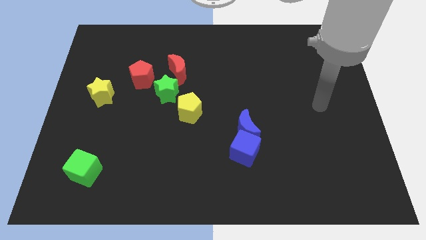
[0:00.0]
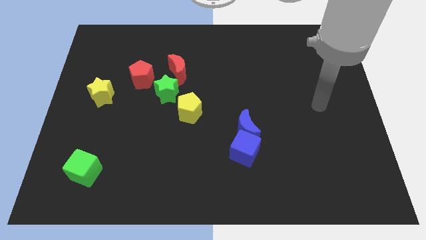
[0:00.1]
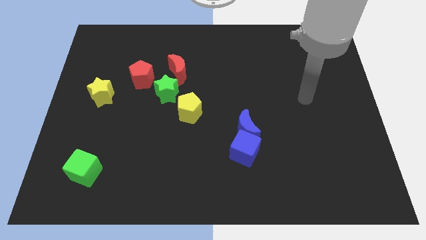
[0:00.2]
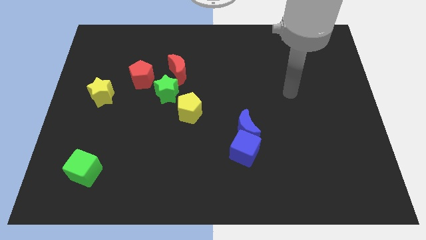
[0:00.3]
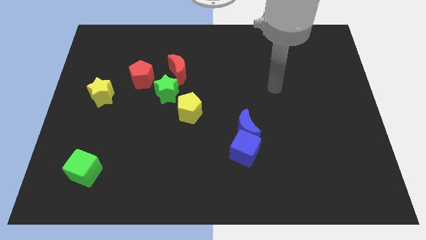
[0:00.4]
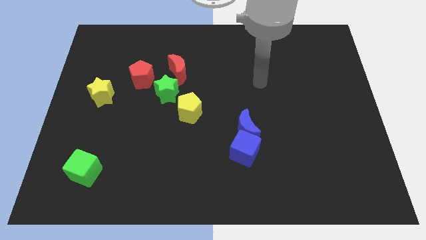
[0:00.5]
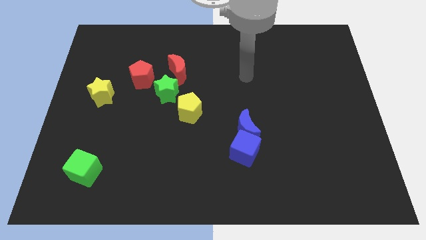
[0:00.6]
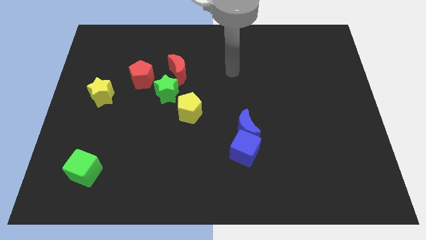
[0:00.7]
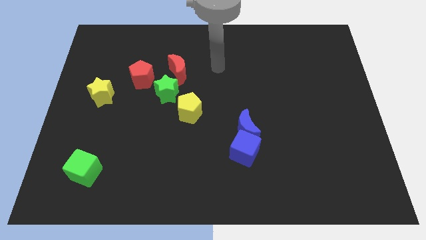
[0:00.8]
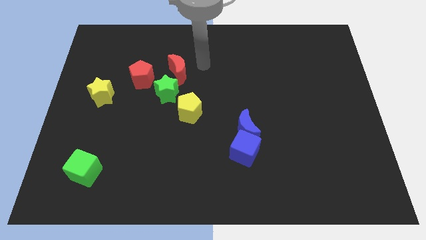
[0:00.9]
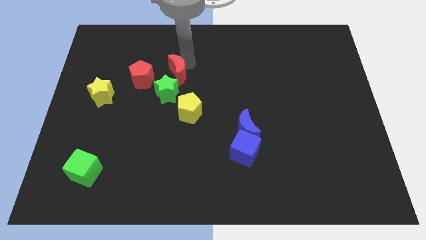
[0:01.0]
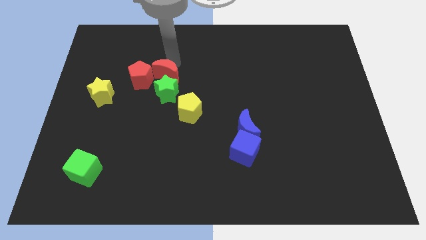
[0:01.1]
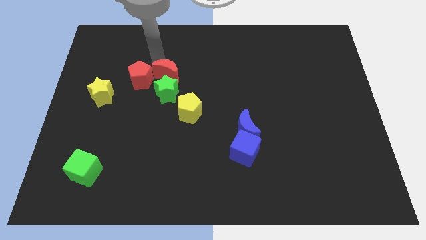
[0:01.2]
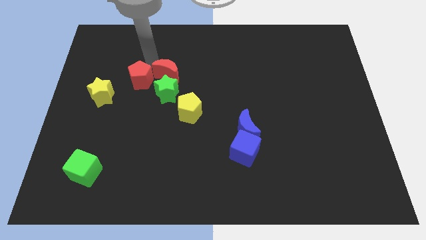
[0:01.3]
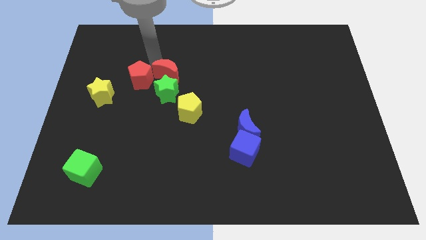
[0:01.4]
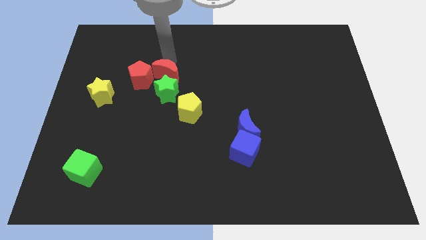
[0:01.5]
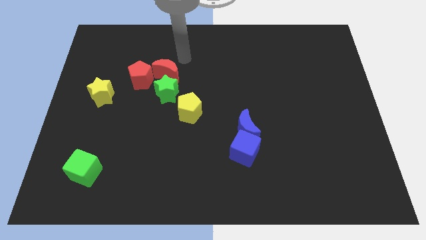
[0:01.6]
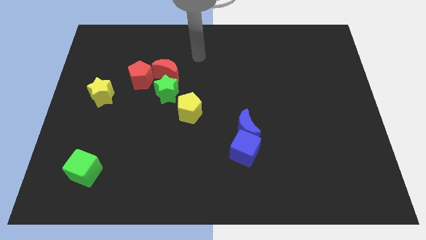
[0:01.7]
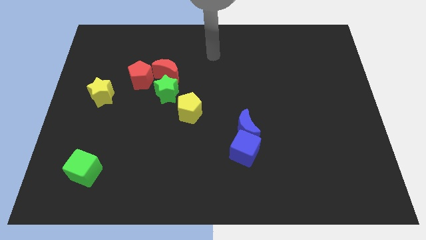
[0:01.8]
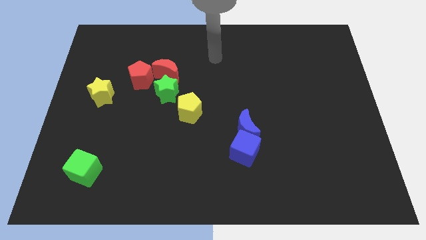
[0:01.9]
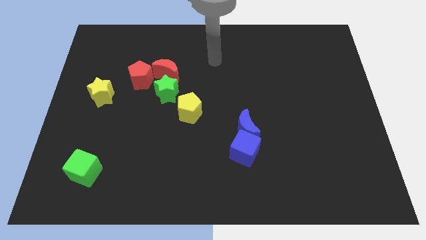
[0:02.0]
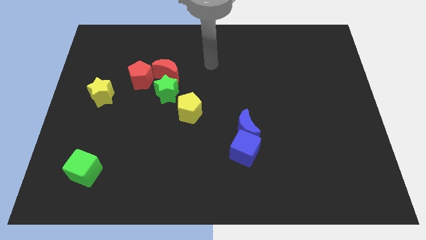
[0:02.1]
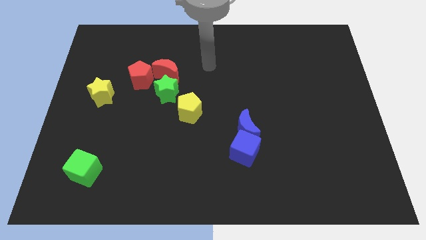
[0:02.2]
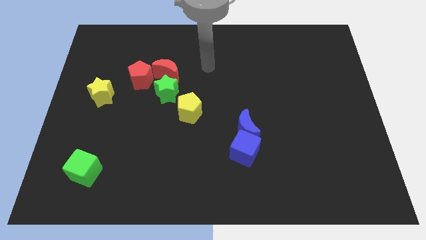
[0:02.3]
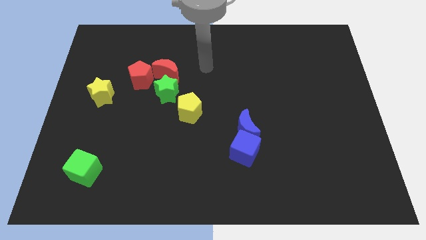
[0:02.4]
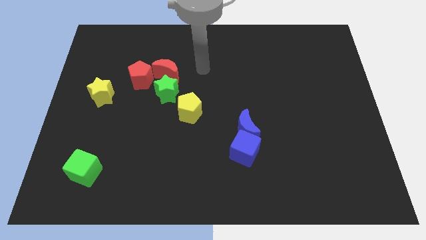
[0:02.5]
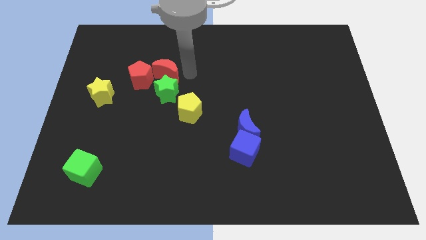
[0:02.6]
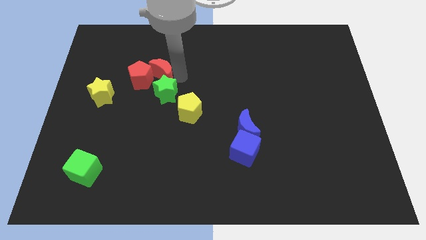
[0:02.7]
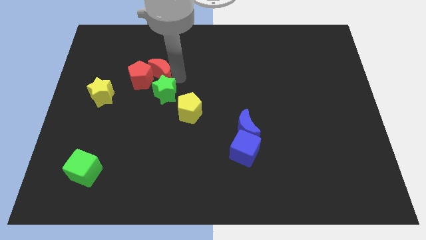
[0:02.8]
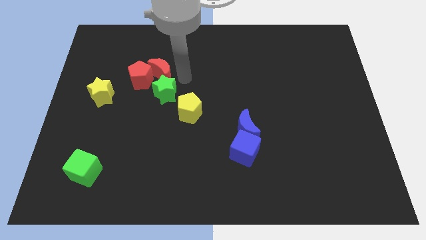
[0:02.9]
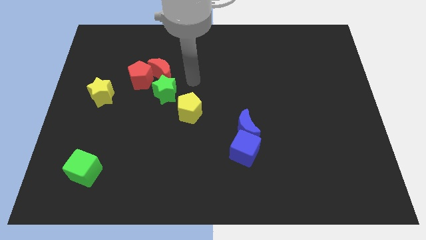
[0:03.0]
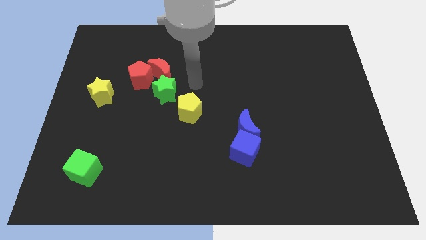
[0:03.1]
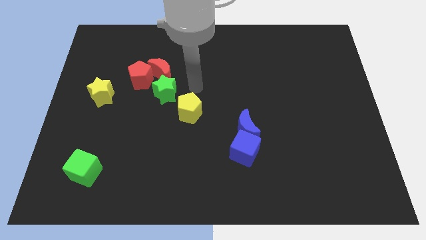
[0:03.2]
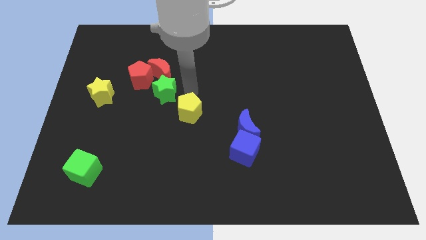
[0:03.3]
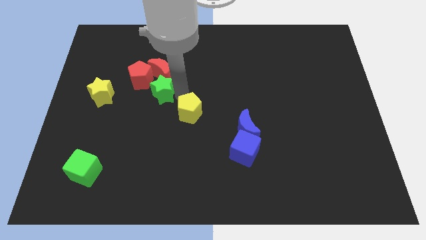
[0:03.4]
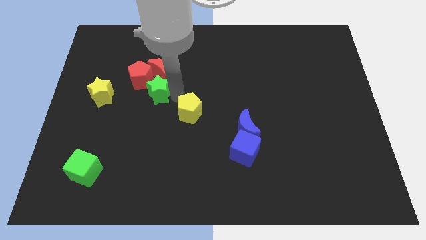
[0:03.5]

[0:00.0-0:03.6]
push the red crescent slightly to its left

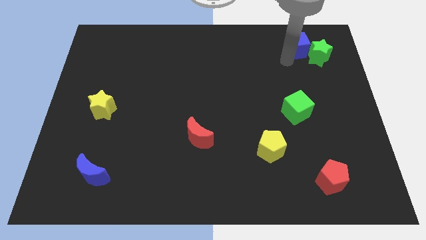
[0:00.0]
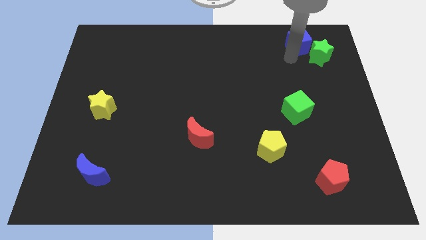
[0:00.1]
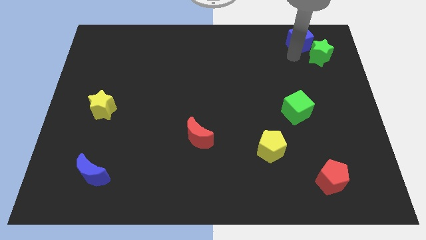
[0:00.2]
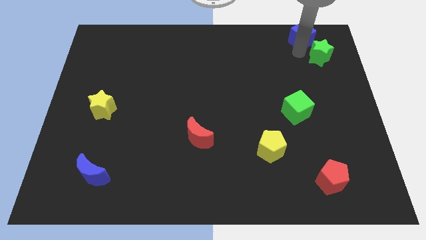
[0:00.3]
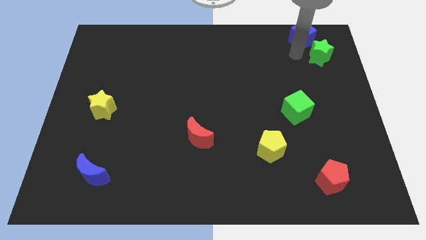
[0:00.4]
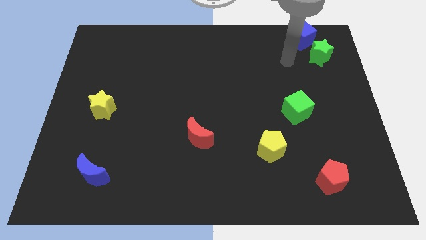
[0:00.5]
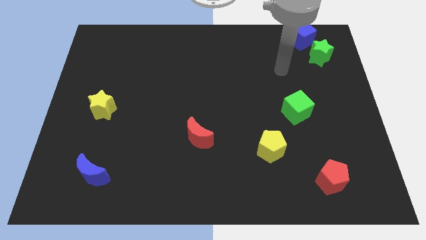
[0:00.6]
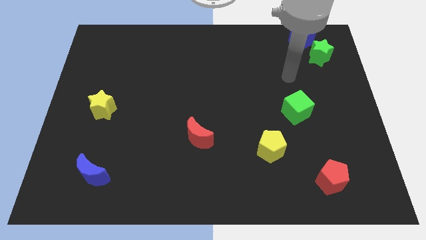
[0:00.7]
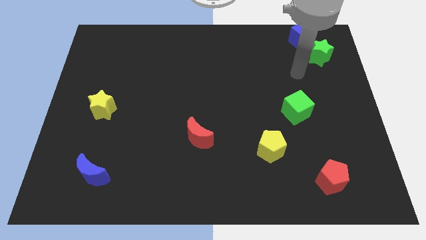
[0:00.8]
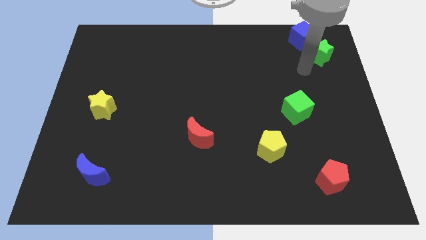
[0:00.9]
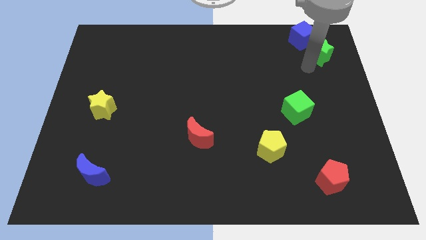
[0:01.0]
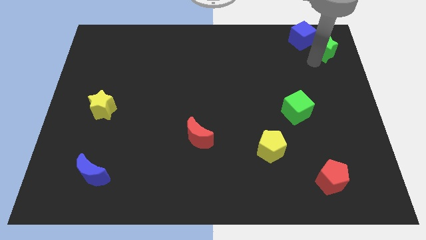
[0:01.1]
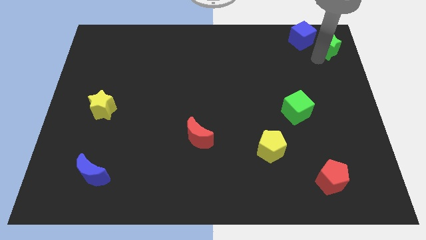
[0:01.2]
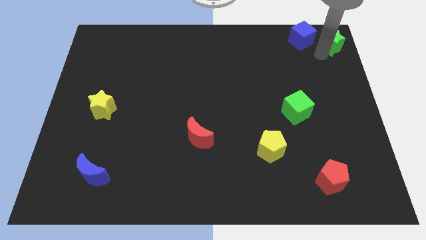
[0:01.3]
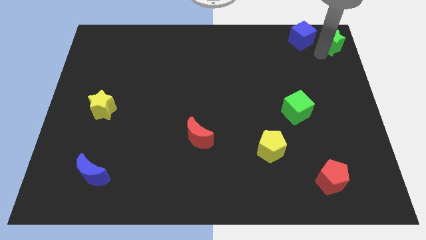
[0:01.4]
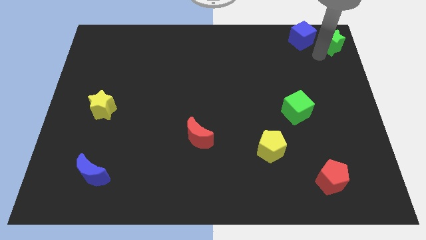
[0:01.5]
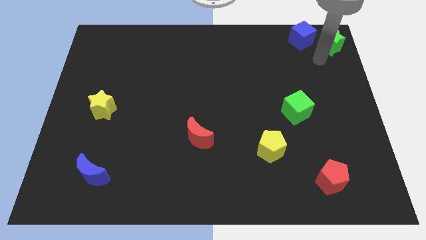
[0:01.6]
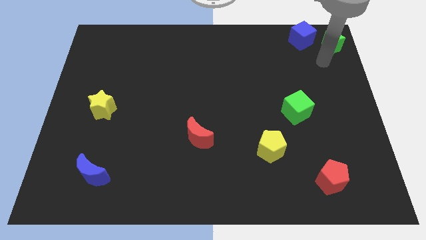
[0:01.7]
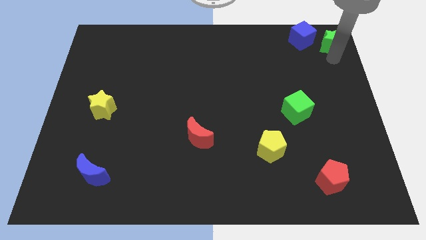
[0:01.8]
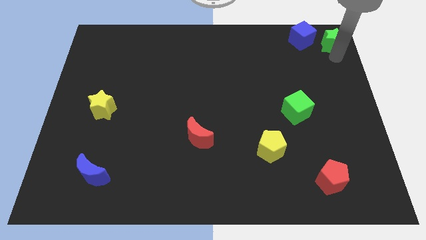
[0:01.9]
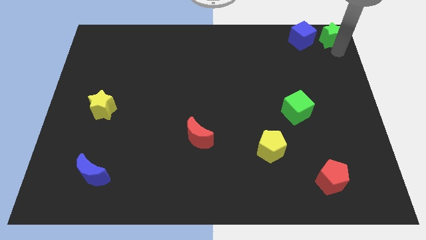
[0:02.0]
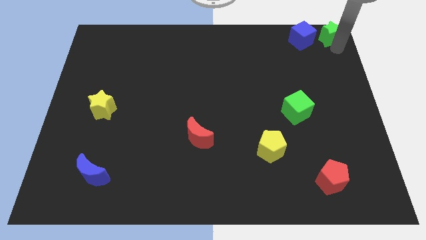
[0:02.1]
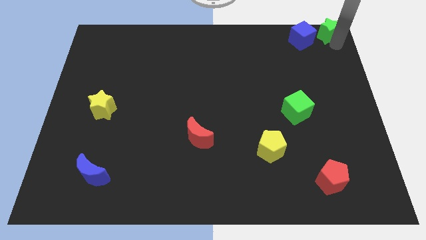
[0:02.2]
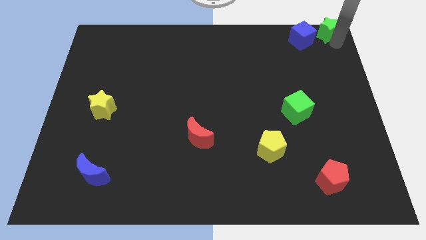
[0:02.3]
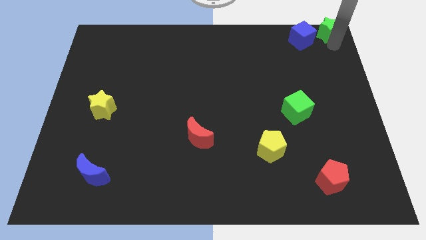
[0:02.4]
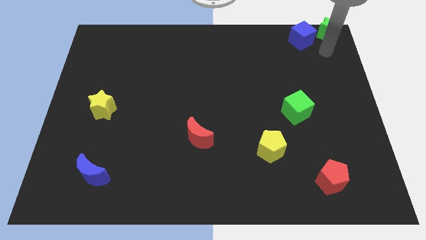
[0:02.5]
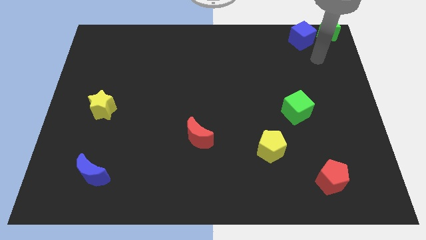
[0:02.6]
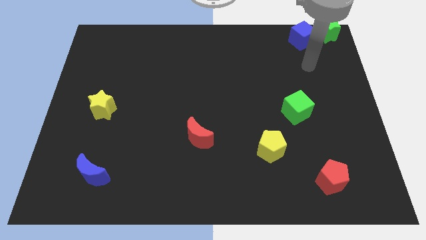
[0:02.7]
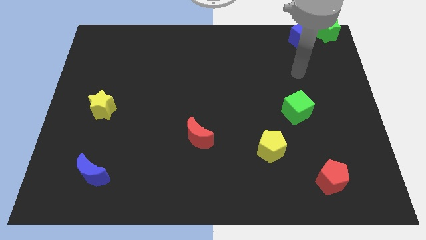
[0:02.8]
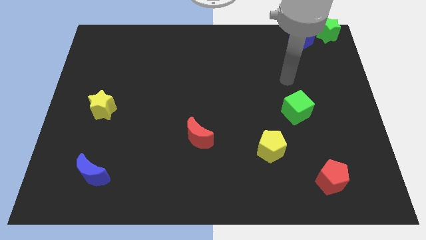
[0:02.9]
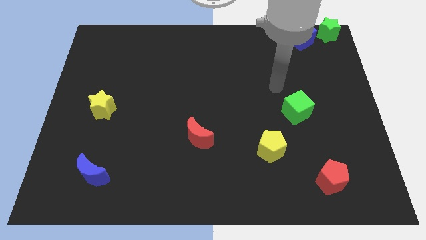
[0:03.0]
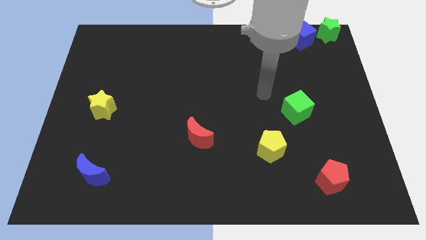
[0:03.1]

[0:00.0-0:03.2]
place green star towards top corner

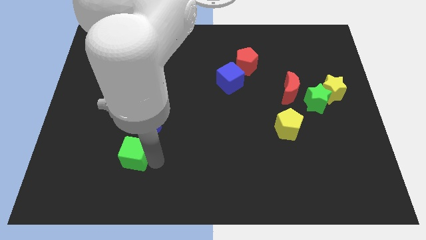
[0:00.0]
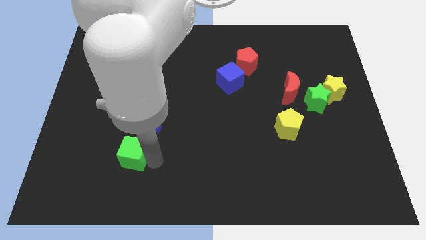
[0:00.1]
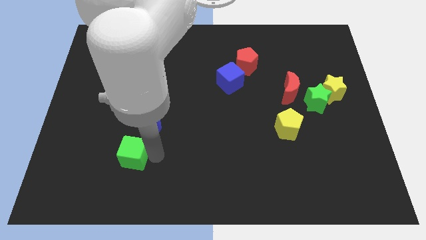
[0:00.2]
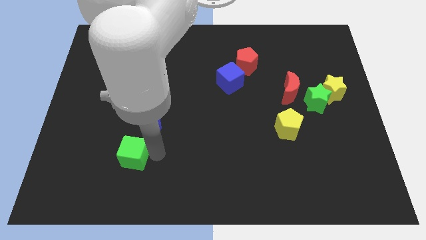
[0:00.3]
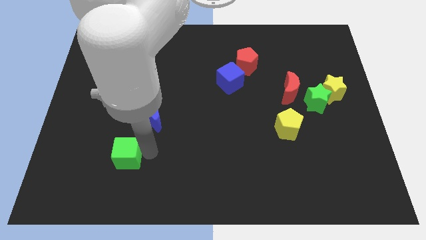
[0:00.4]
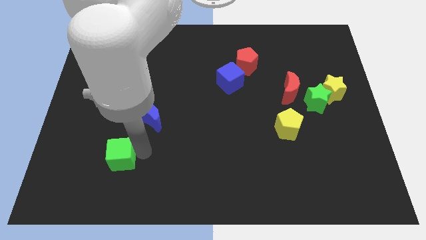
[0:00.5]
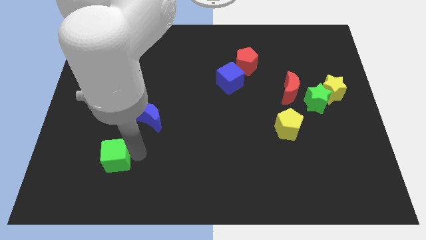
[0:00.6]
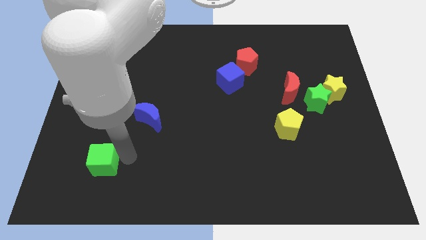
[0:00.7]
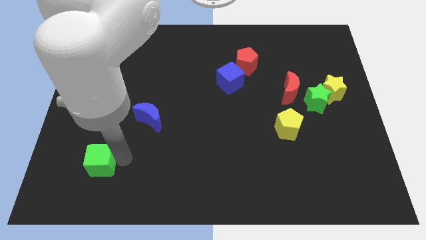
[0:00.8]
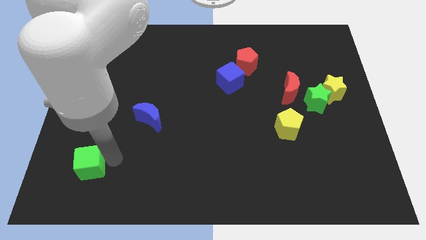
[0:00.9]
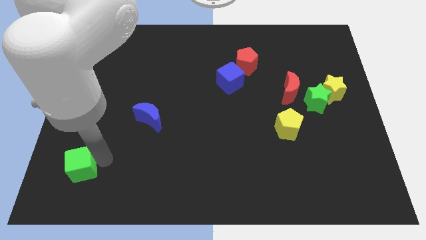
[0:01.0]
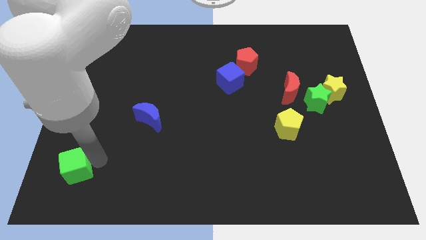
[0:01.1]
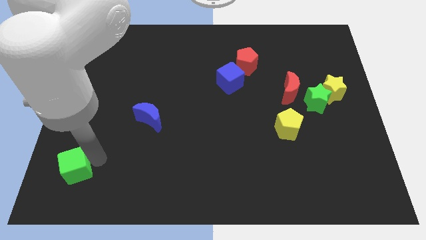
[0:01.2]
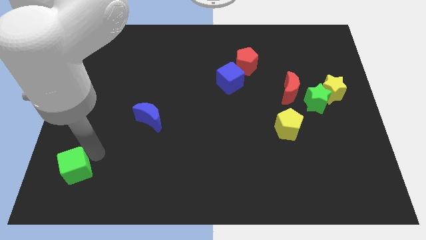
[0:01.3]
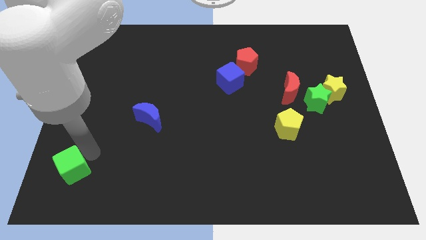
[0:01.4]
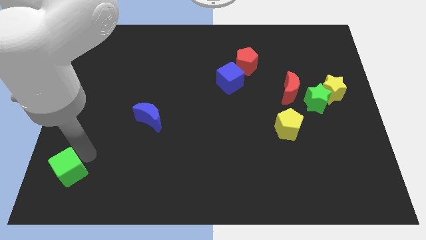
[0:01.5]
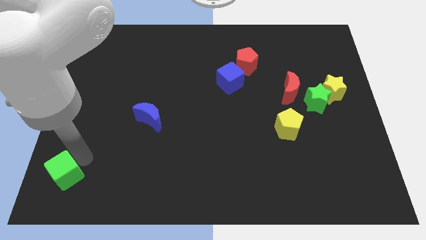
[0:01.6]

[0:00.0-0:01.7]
slide the green cube to the bottom left

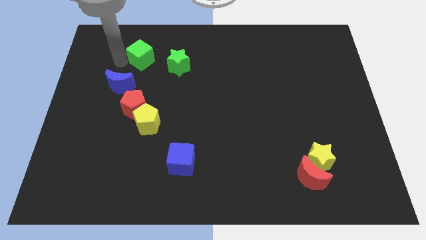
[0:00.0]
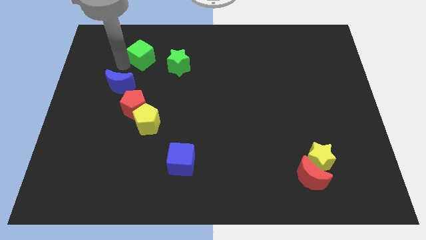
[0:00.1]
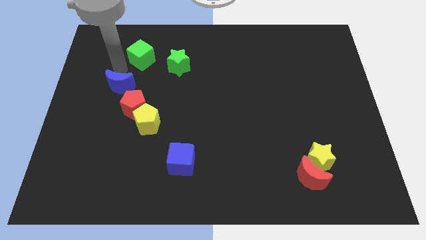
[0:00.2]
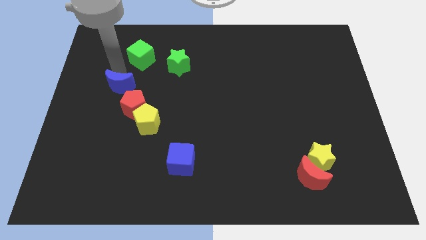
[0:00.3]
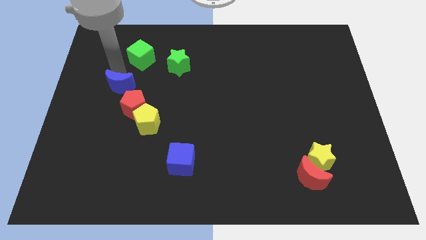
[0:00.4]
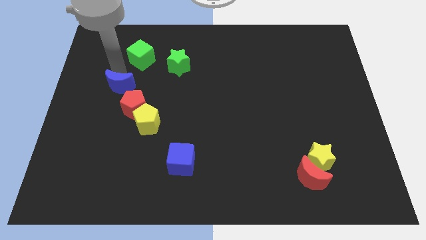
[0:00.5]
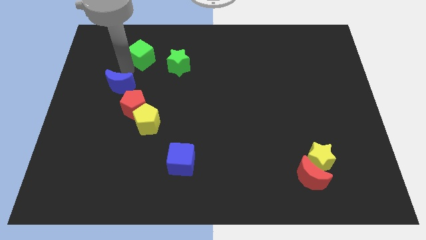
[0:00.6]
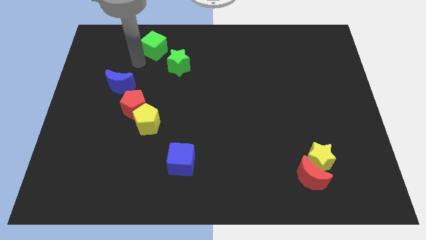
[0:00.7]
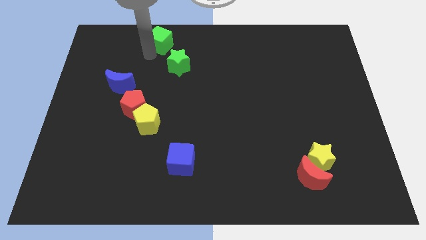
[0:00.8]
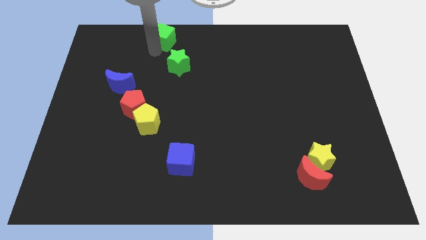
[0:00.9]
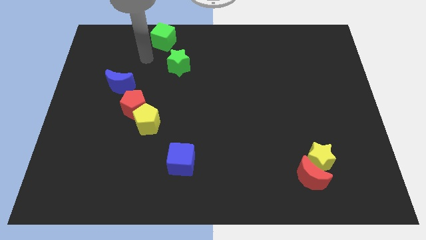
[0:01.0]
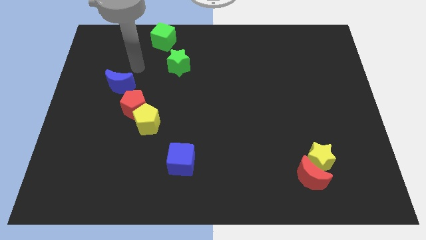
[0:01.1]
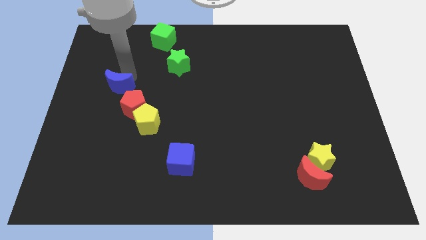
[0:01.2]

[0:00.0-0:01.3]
put the green cube at the top left side of the green star
